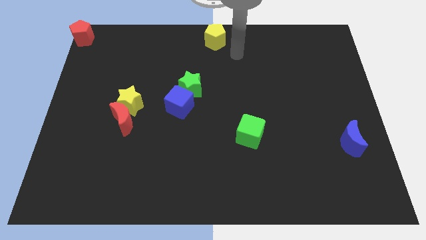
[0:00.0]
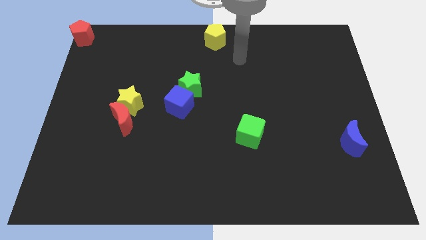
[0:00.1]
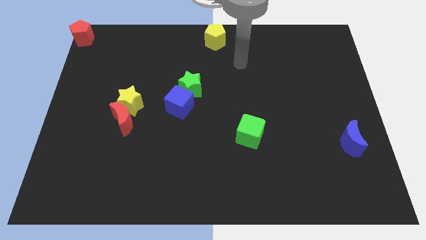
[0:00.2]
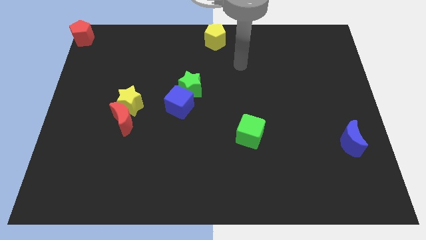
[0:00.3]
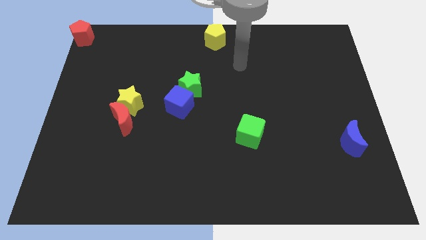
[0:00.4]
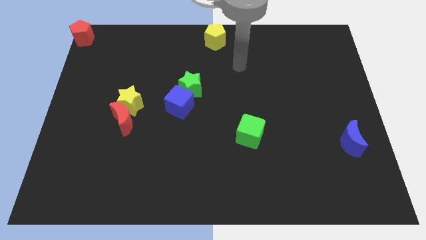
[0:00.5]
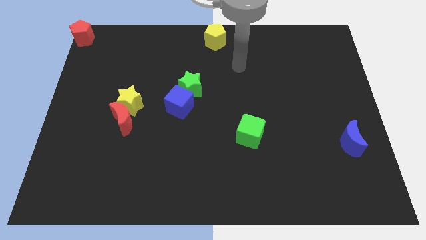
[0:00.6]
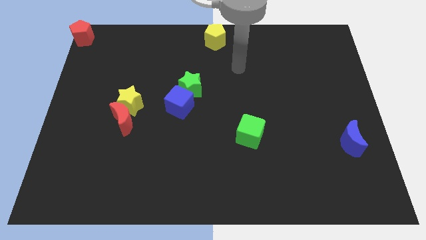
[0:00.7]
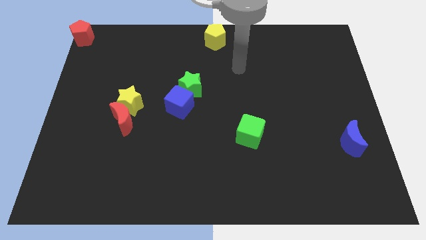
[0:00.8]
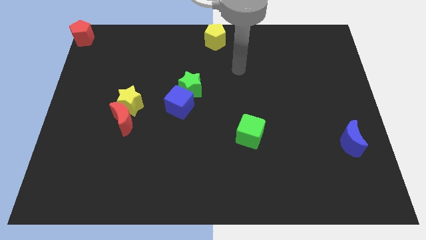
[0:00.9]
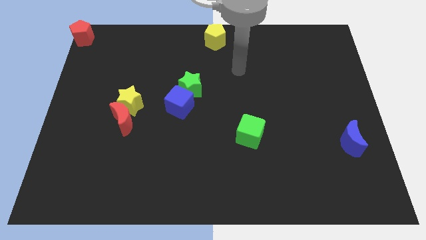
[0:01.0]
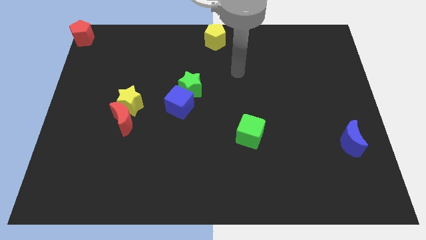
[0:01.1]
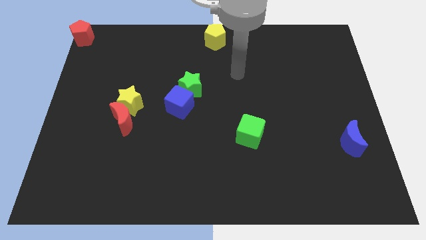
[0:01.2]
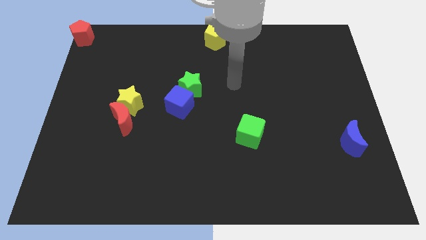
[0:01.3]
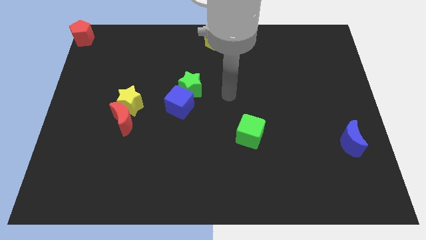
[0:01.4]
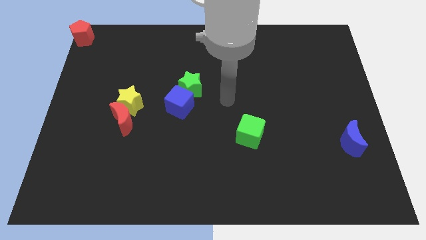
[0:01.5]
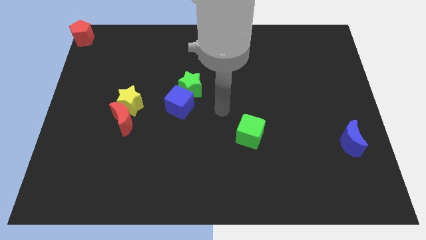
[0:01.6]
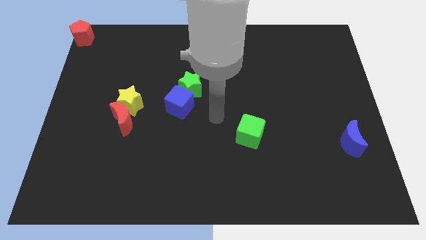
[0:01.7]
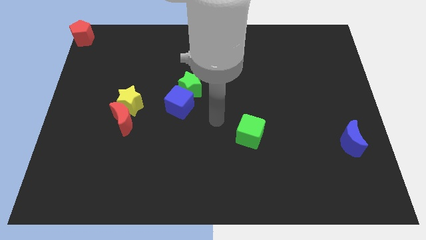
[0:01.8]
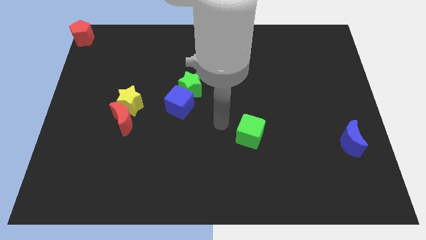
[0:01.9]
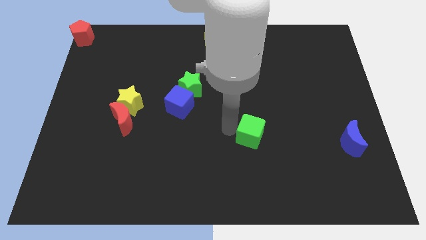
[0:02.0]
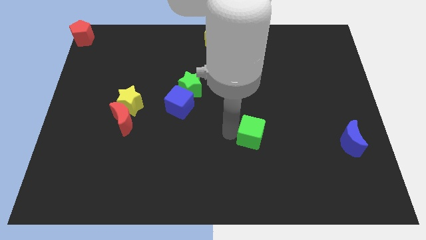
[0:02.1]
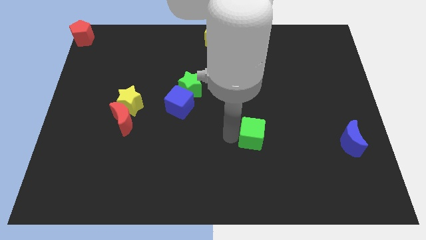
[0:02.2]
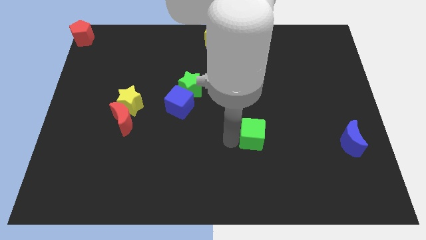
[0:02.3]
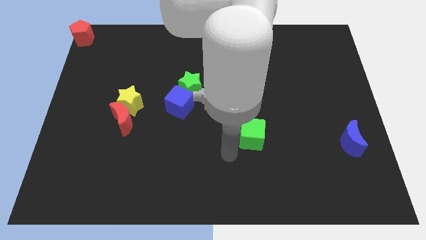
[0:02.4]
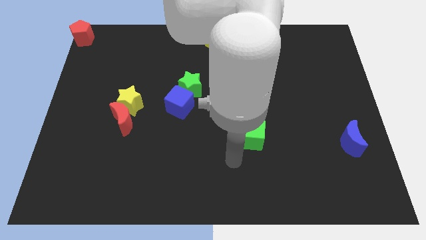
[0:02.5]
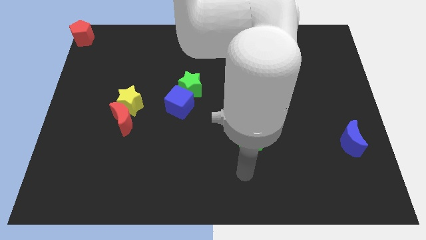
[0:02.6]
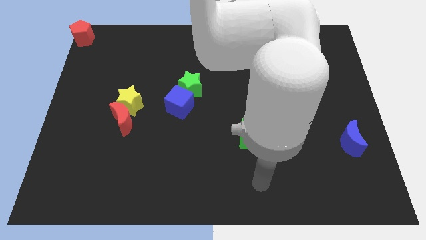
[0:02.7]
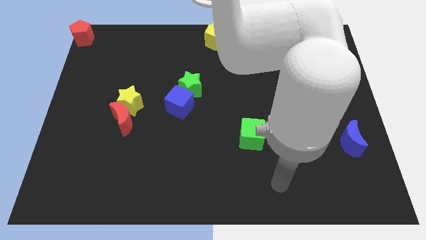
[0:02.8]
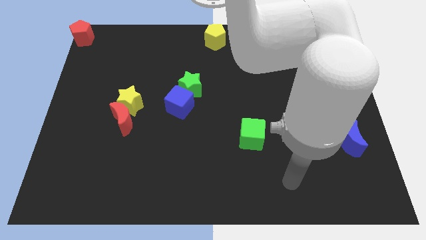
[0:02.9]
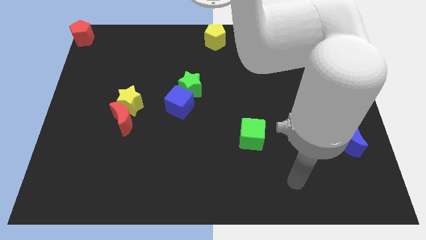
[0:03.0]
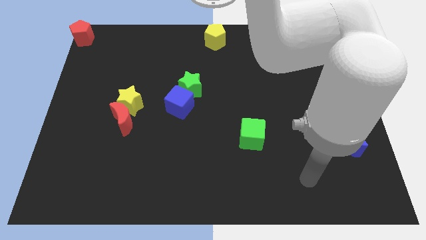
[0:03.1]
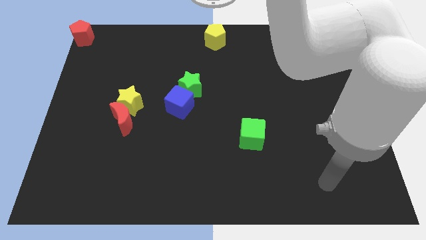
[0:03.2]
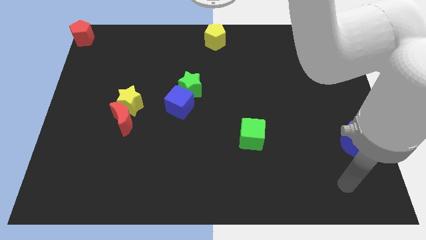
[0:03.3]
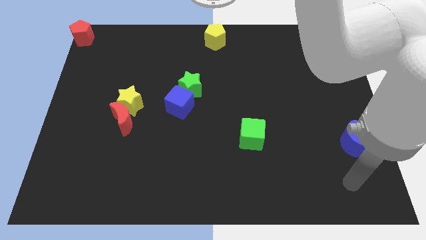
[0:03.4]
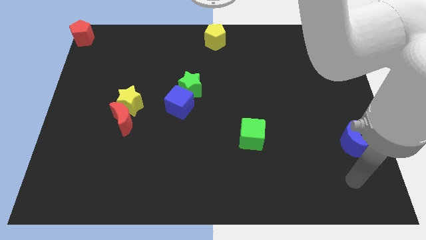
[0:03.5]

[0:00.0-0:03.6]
go and tap the green cube

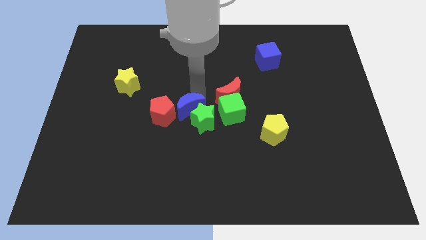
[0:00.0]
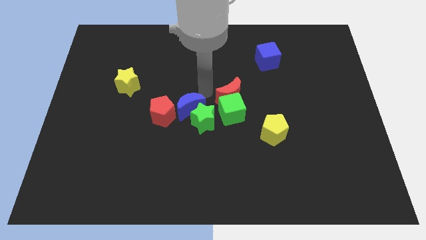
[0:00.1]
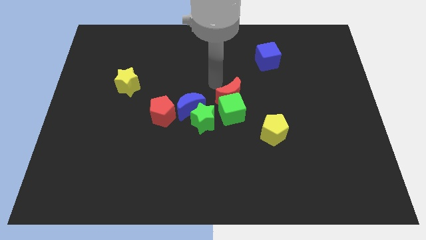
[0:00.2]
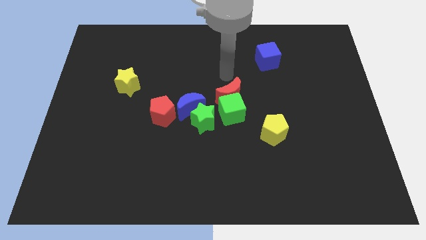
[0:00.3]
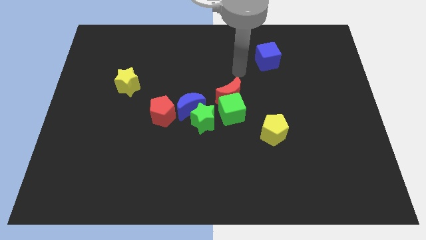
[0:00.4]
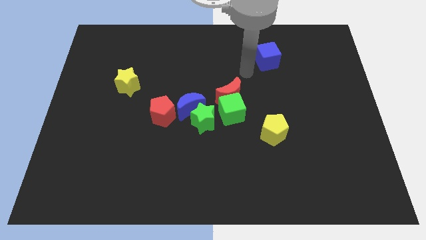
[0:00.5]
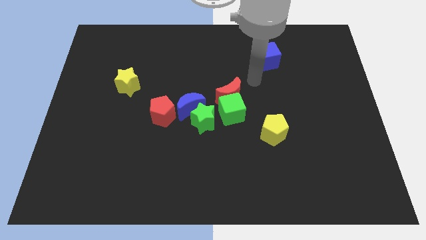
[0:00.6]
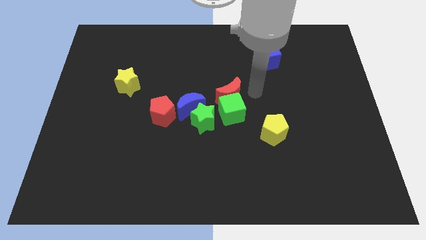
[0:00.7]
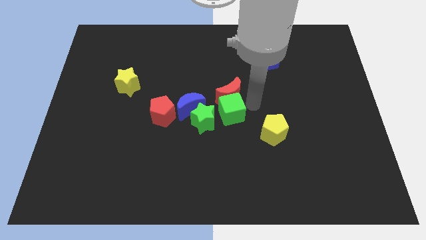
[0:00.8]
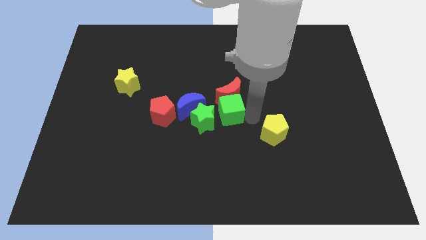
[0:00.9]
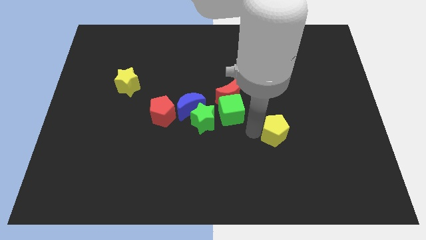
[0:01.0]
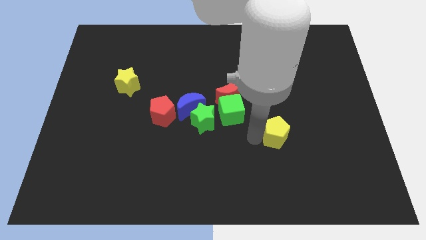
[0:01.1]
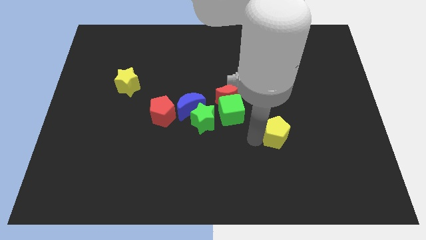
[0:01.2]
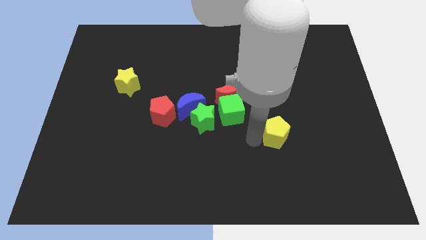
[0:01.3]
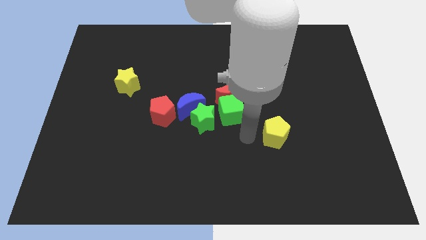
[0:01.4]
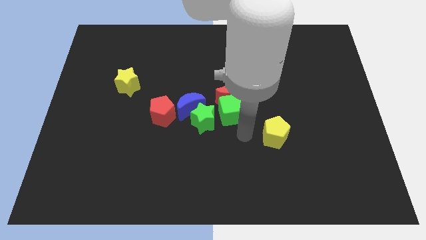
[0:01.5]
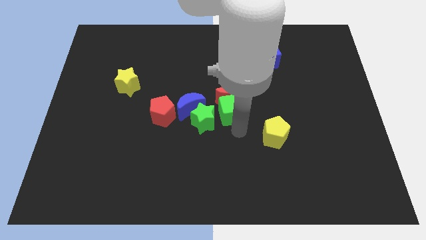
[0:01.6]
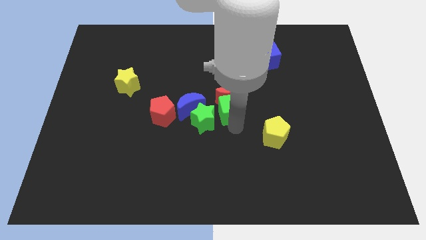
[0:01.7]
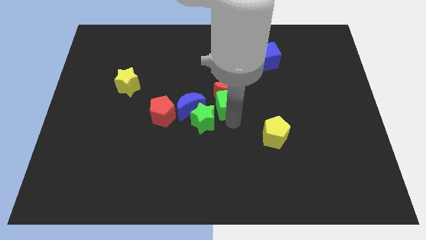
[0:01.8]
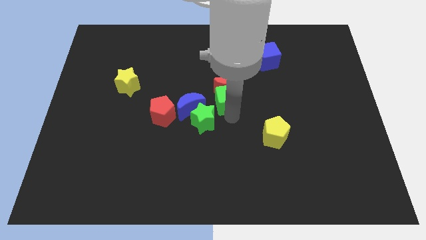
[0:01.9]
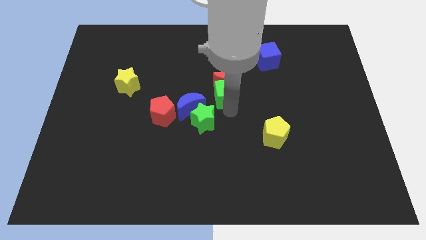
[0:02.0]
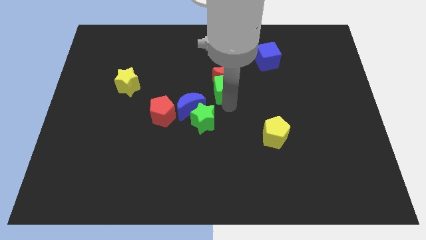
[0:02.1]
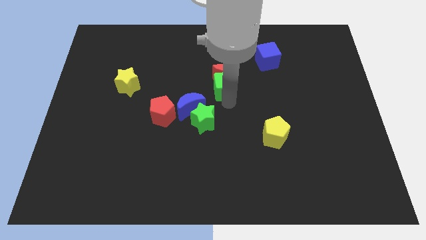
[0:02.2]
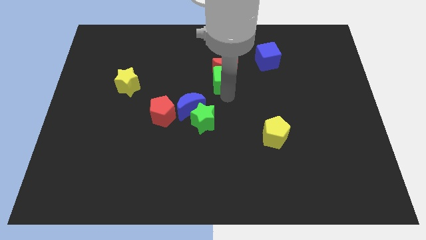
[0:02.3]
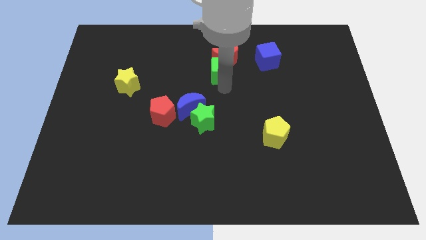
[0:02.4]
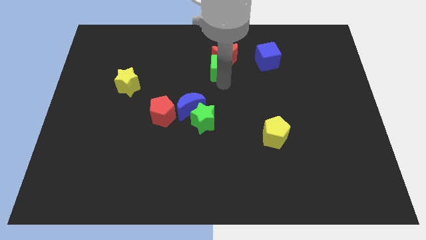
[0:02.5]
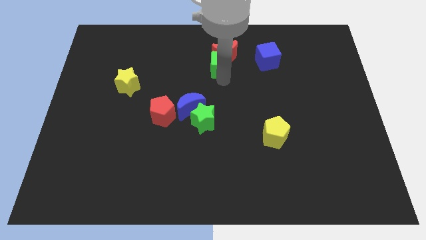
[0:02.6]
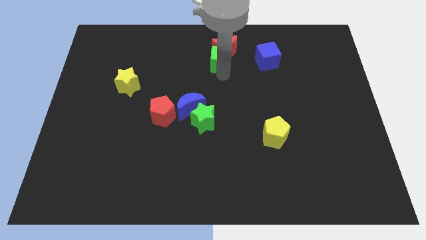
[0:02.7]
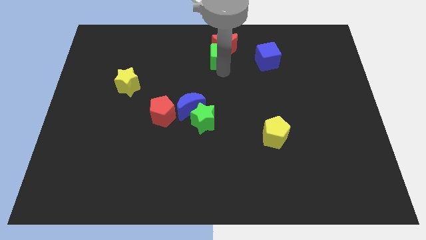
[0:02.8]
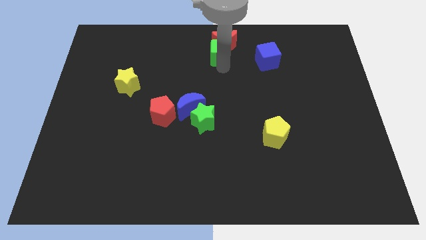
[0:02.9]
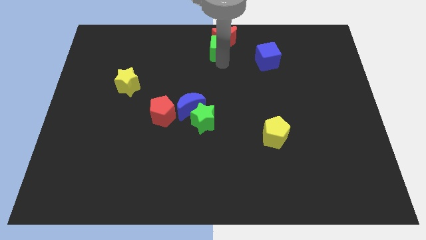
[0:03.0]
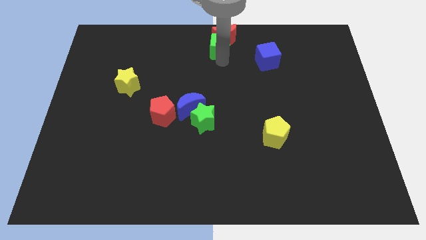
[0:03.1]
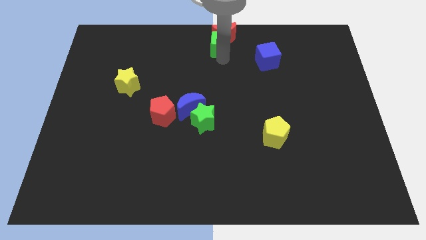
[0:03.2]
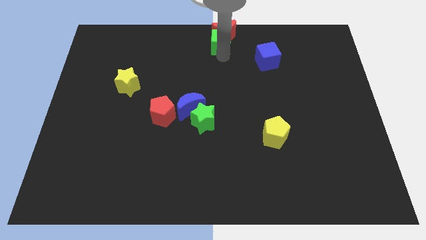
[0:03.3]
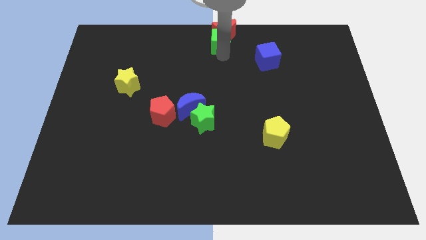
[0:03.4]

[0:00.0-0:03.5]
move green cube along with red moon at center top

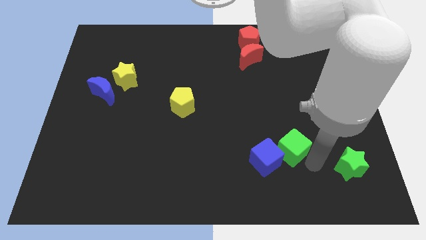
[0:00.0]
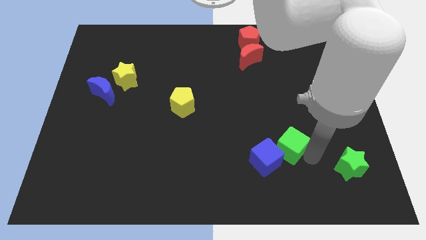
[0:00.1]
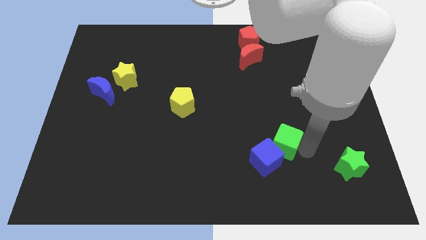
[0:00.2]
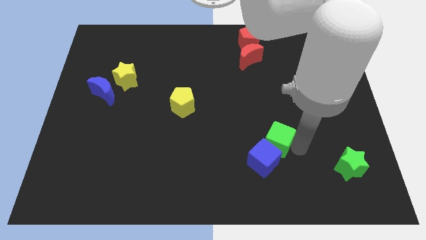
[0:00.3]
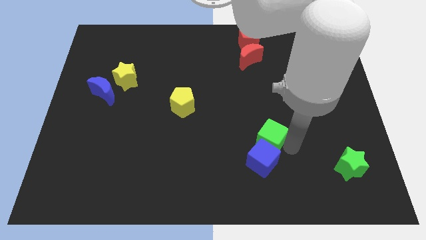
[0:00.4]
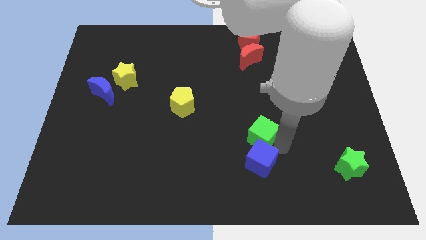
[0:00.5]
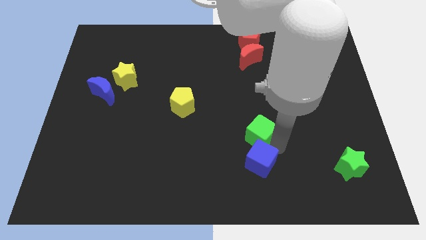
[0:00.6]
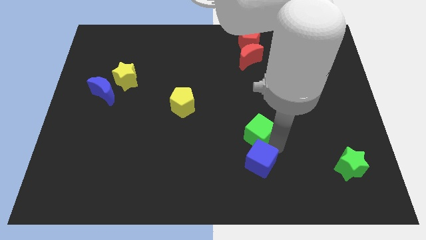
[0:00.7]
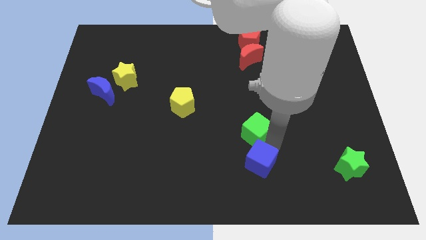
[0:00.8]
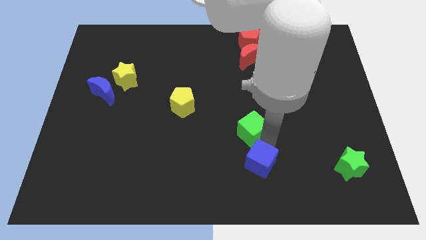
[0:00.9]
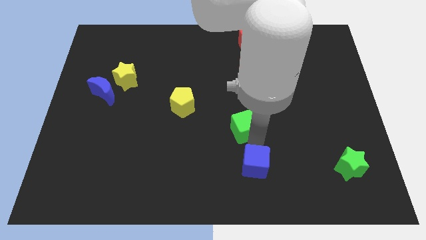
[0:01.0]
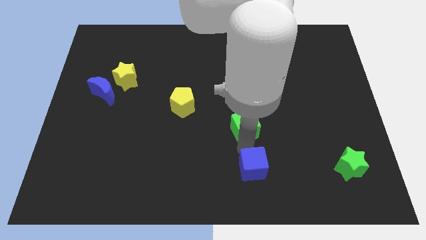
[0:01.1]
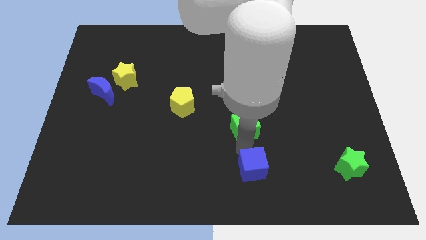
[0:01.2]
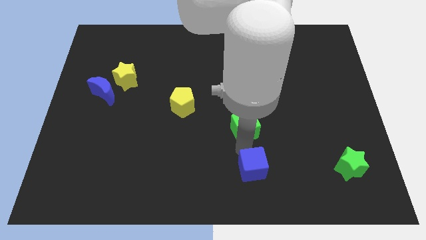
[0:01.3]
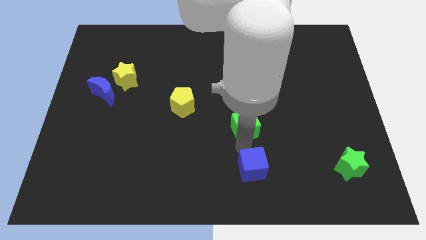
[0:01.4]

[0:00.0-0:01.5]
separate green cube from blue cube

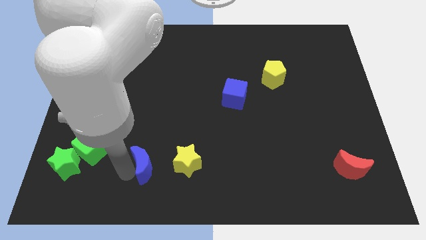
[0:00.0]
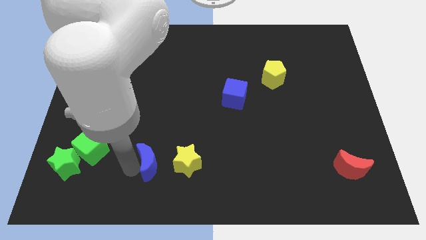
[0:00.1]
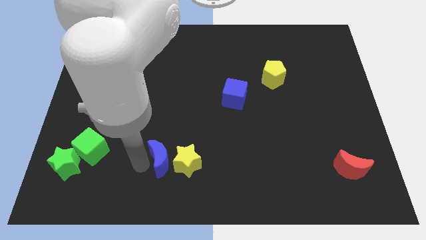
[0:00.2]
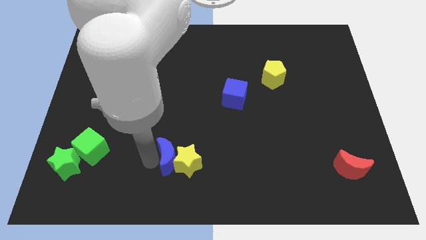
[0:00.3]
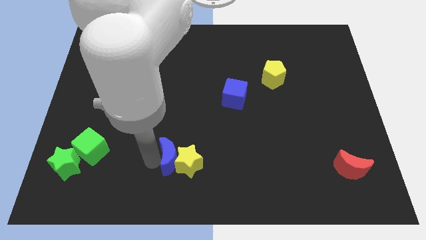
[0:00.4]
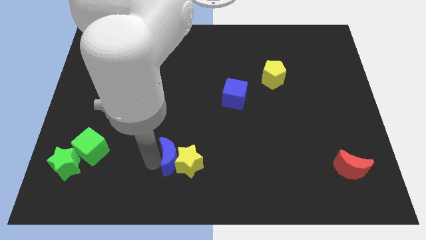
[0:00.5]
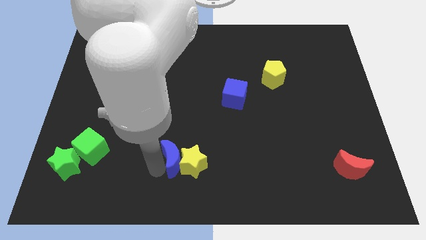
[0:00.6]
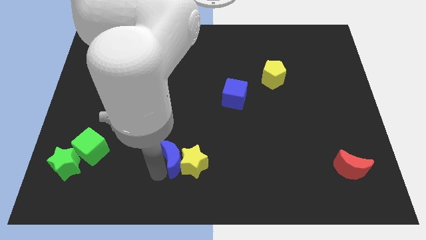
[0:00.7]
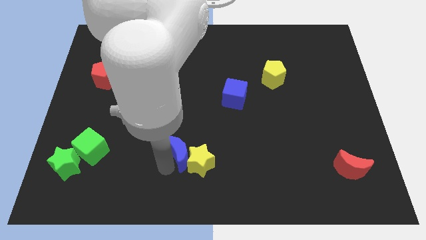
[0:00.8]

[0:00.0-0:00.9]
push the blue crescent into the yellow star
